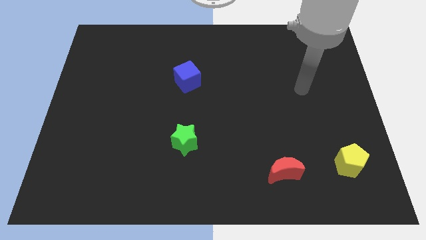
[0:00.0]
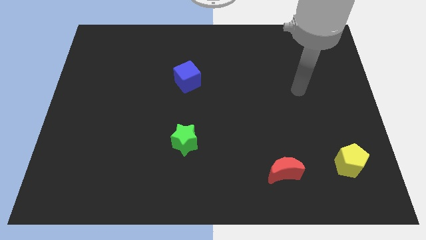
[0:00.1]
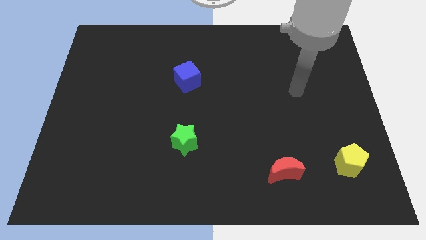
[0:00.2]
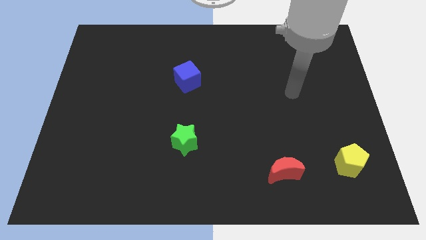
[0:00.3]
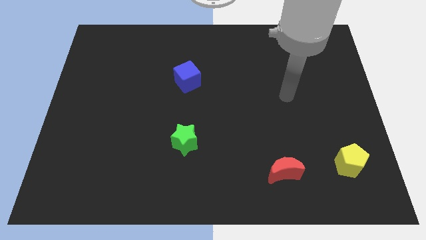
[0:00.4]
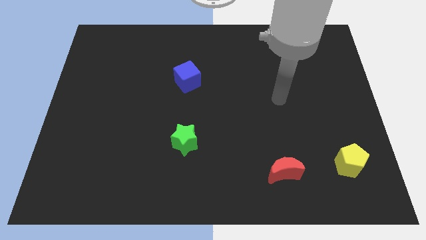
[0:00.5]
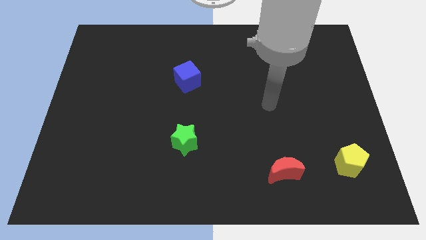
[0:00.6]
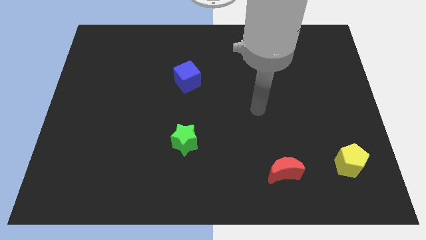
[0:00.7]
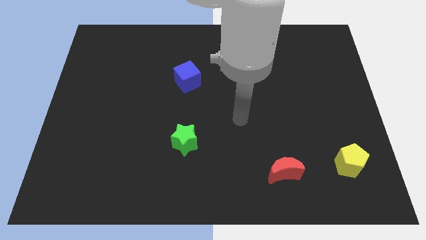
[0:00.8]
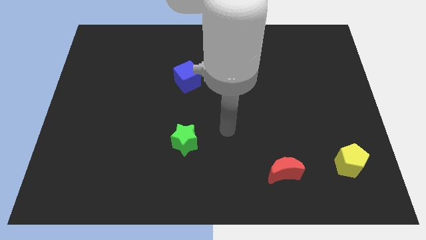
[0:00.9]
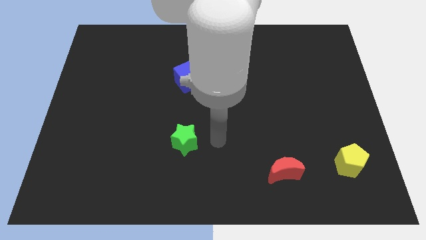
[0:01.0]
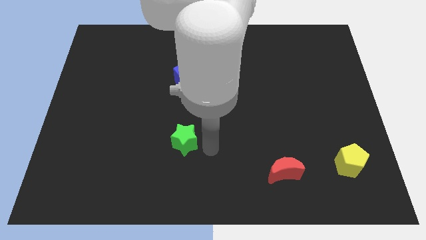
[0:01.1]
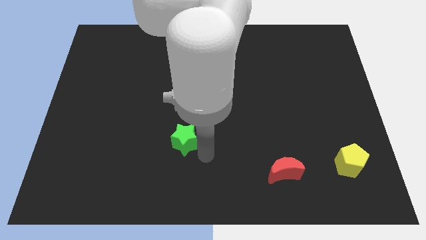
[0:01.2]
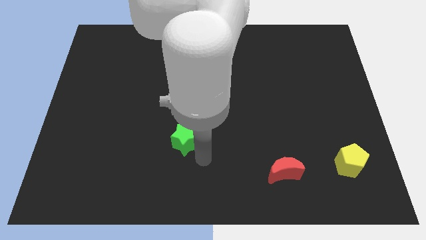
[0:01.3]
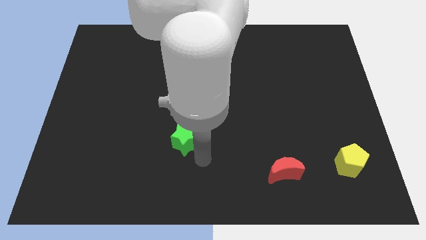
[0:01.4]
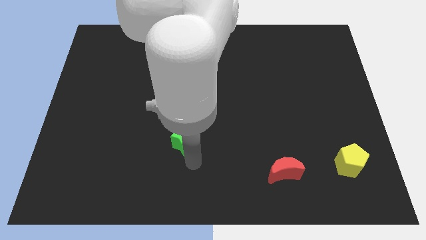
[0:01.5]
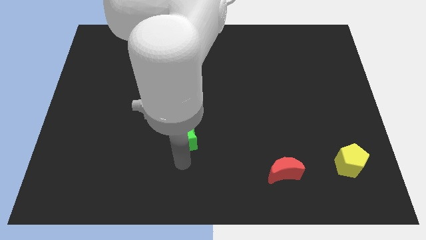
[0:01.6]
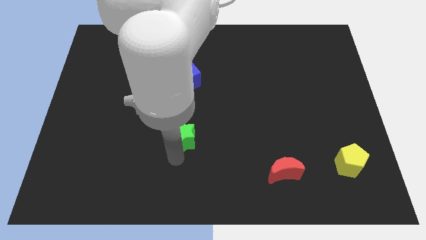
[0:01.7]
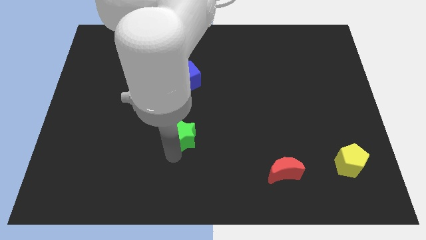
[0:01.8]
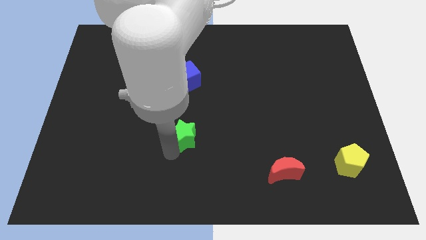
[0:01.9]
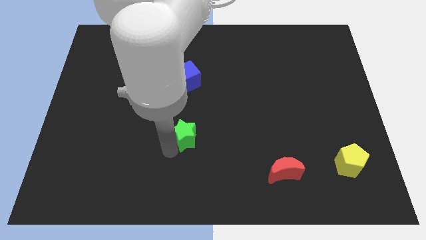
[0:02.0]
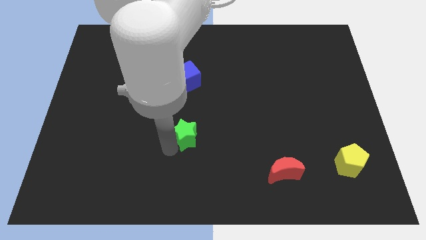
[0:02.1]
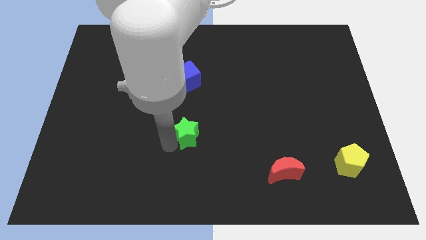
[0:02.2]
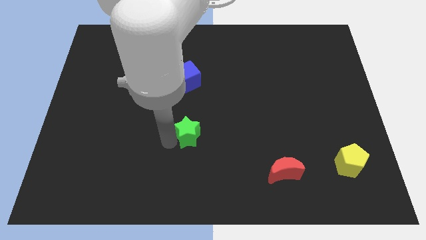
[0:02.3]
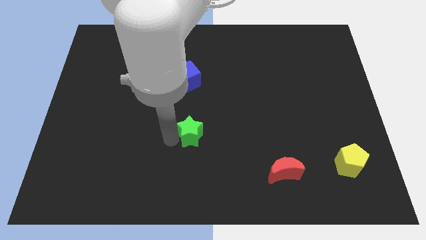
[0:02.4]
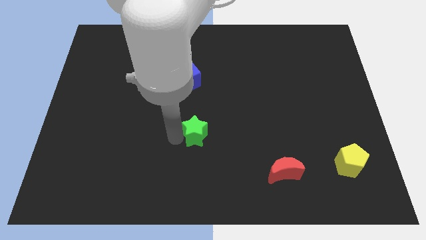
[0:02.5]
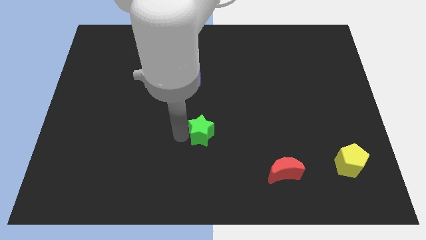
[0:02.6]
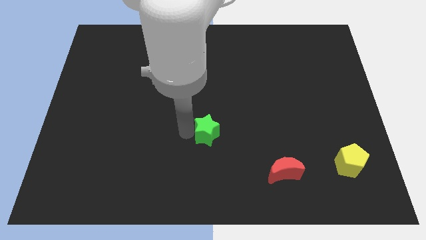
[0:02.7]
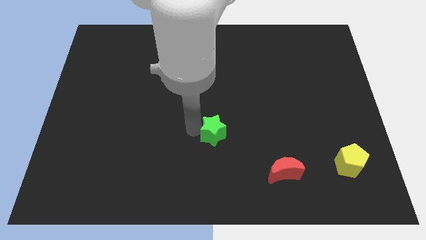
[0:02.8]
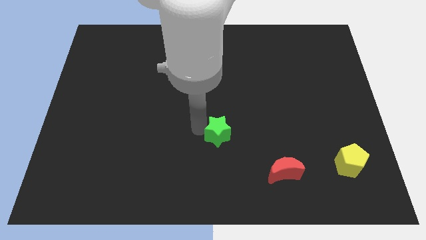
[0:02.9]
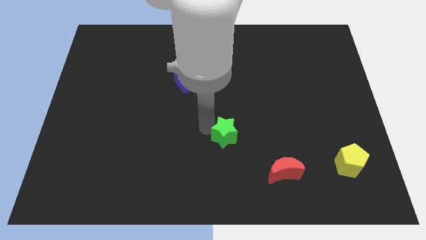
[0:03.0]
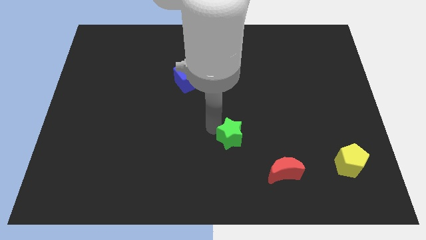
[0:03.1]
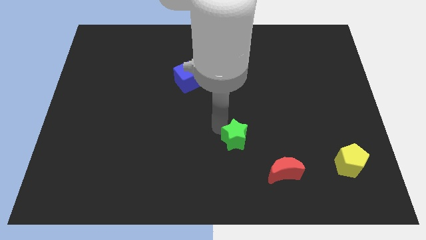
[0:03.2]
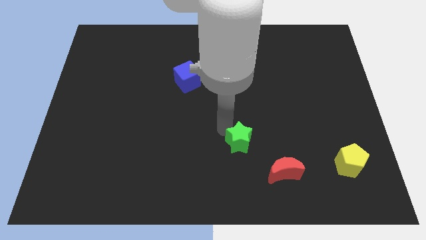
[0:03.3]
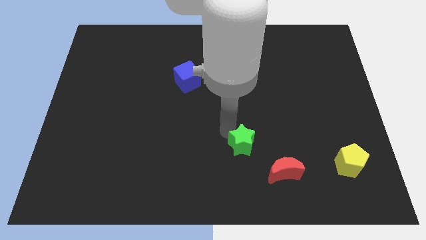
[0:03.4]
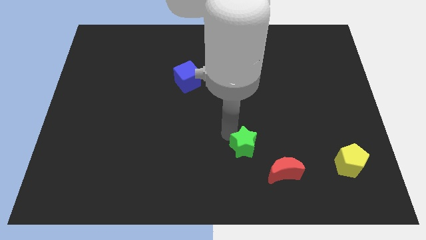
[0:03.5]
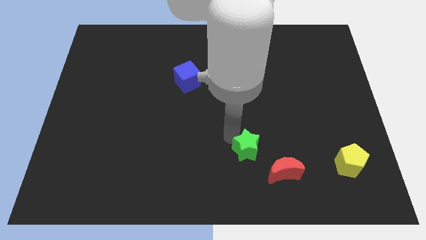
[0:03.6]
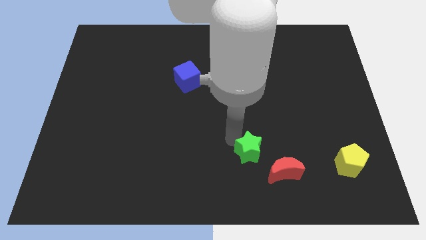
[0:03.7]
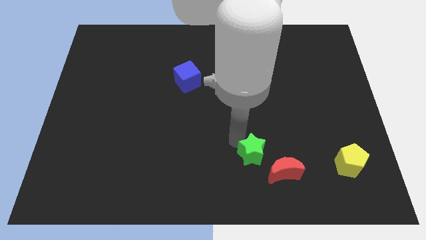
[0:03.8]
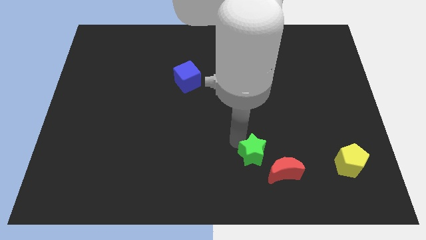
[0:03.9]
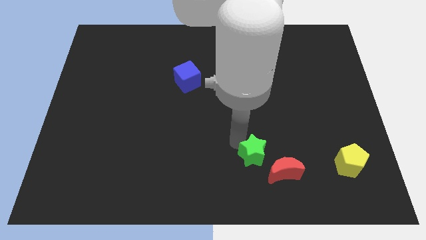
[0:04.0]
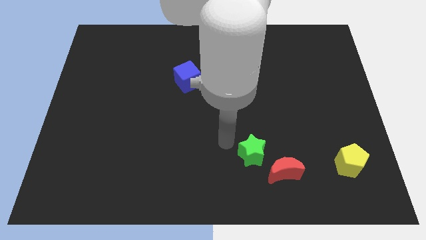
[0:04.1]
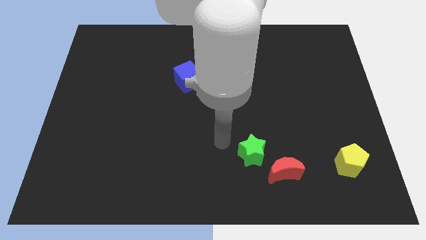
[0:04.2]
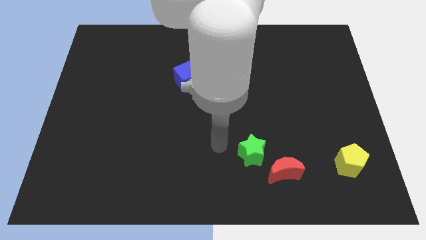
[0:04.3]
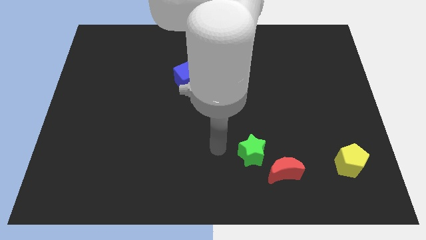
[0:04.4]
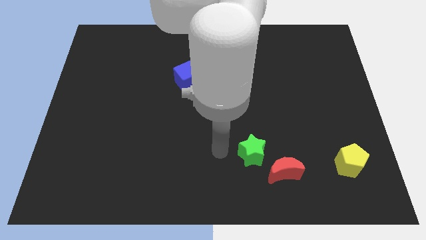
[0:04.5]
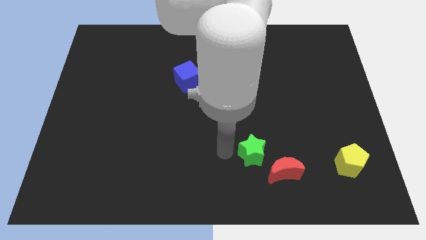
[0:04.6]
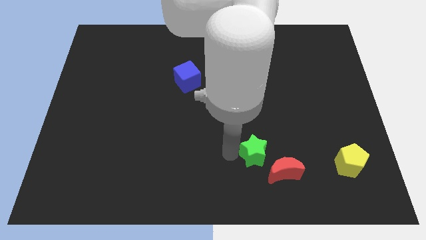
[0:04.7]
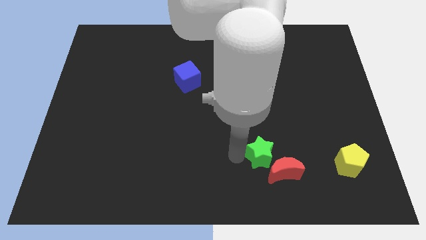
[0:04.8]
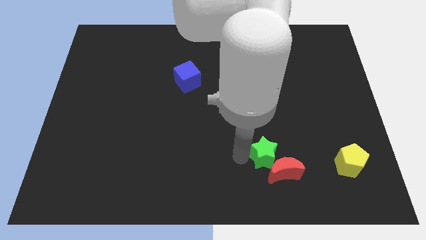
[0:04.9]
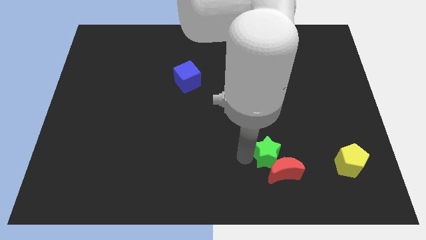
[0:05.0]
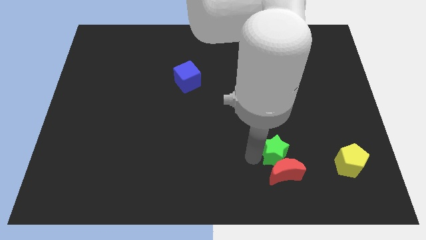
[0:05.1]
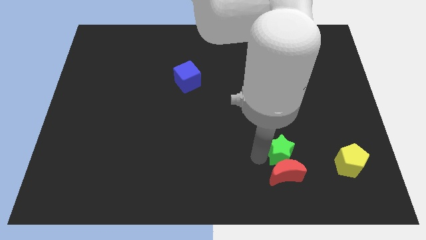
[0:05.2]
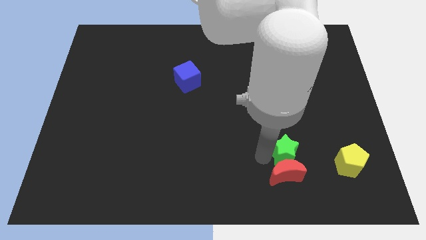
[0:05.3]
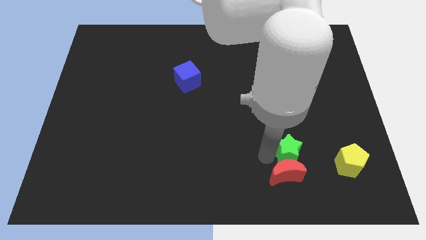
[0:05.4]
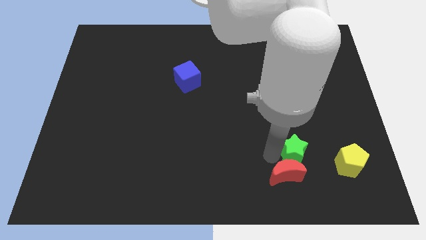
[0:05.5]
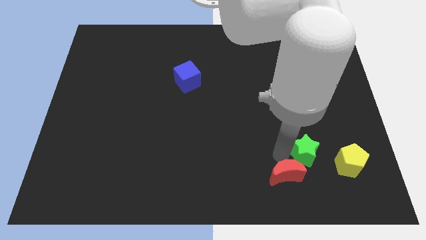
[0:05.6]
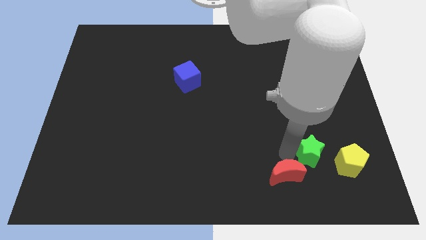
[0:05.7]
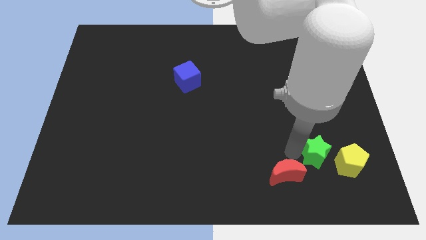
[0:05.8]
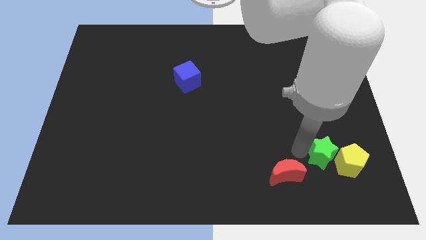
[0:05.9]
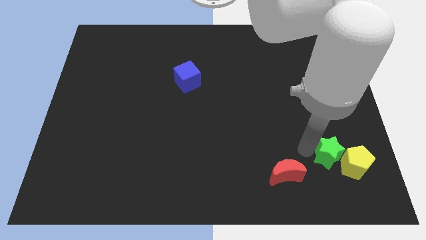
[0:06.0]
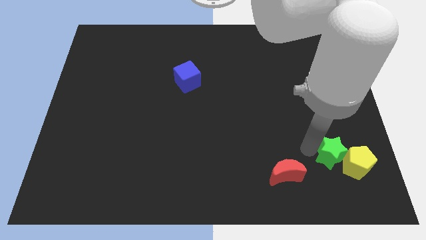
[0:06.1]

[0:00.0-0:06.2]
put the green block close to the pentagon

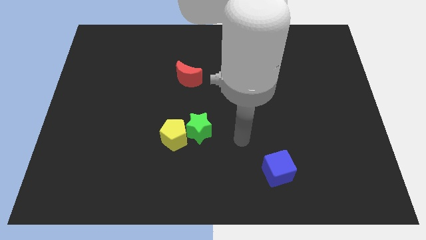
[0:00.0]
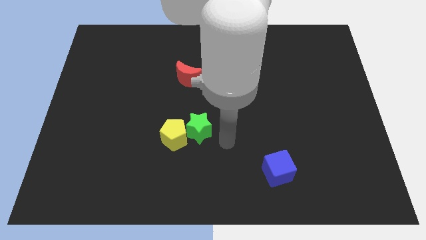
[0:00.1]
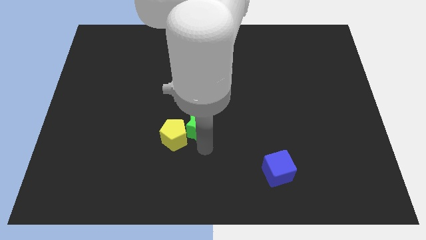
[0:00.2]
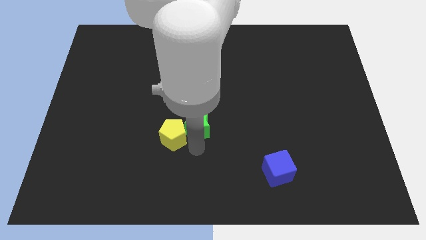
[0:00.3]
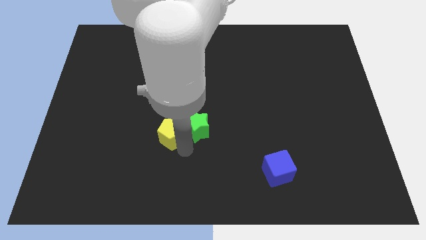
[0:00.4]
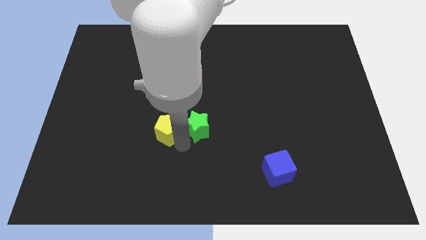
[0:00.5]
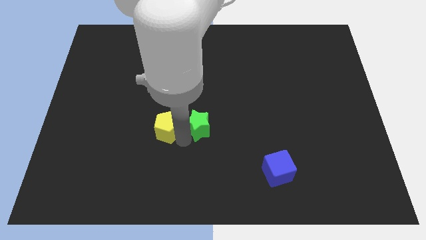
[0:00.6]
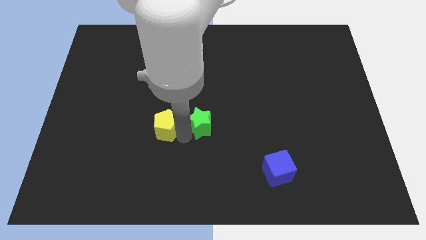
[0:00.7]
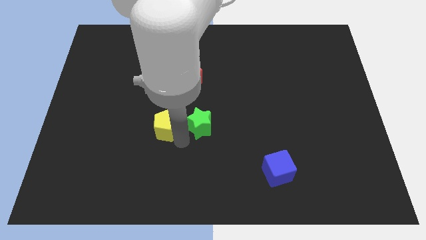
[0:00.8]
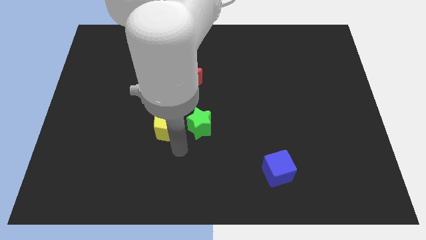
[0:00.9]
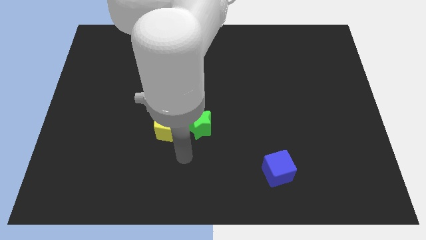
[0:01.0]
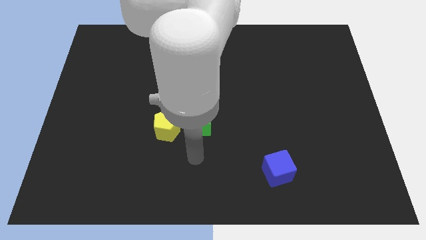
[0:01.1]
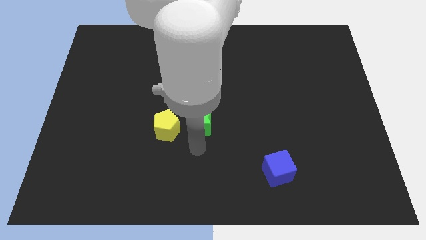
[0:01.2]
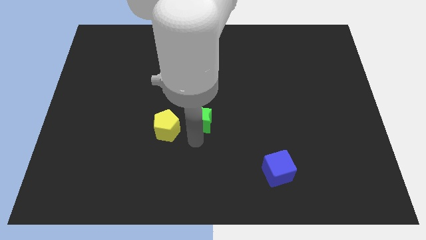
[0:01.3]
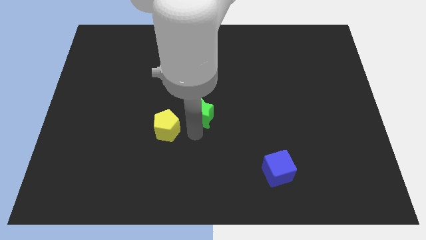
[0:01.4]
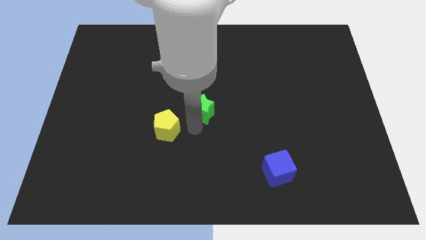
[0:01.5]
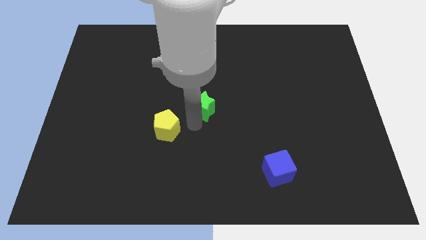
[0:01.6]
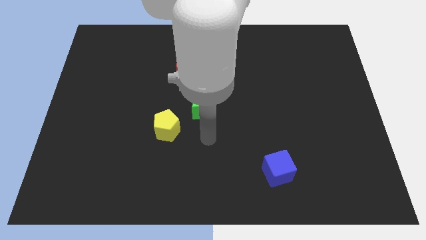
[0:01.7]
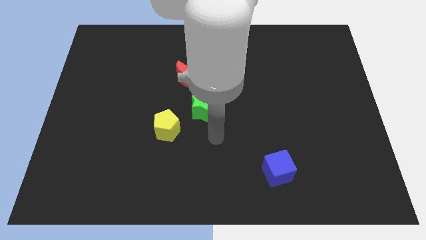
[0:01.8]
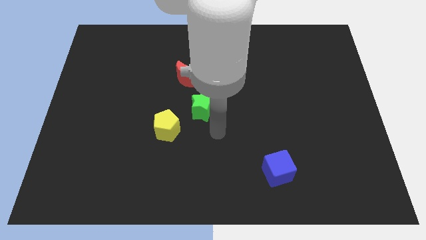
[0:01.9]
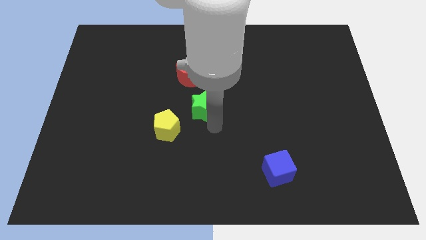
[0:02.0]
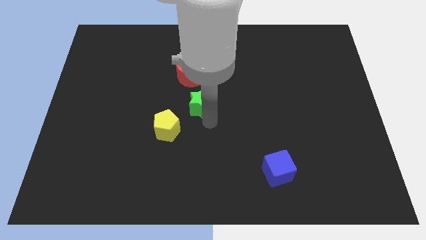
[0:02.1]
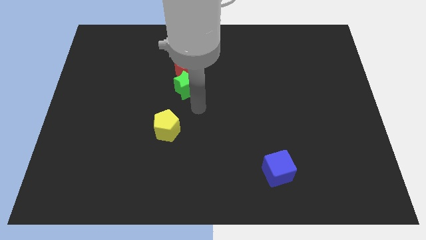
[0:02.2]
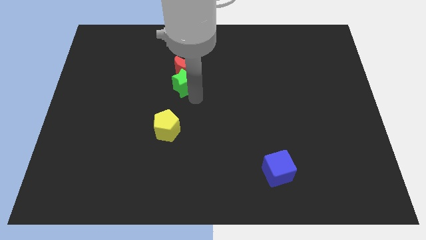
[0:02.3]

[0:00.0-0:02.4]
push the green star to the red moon

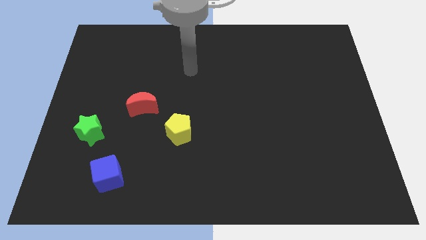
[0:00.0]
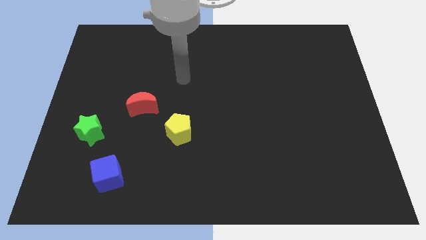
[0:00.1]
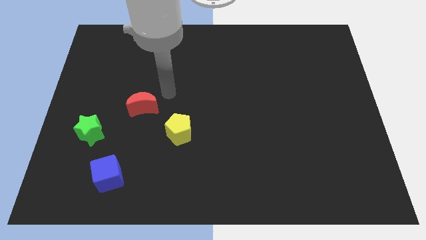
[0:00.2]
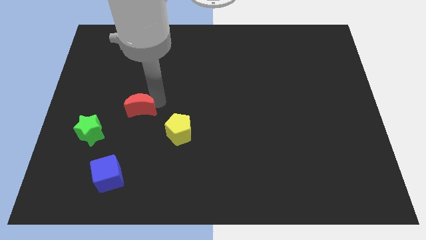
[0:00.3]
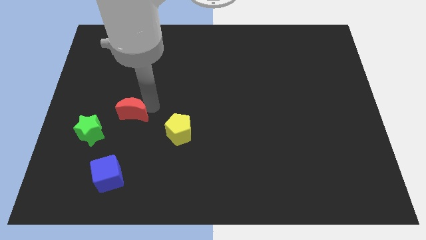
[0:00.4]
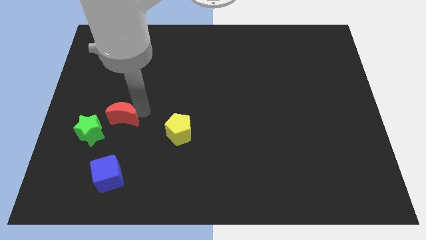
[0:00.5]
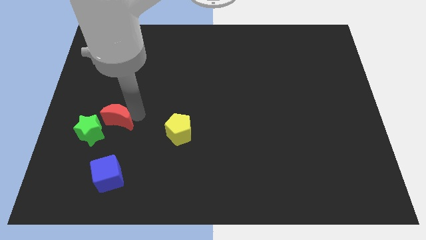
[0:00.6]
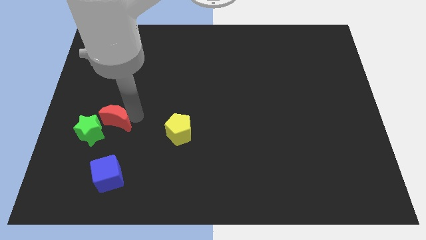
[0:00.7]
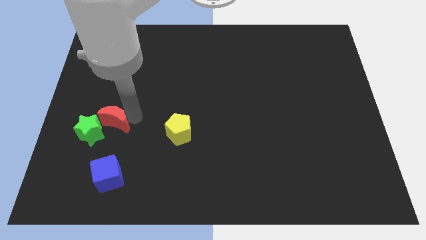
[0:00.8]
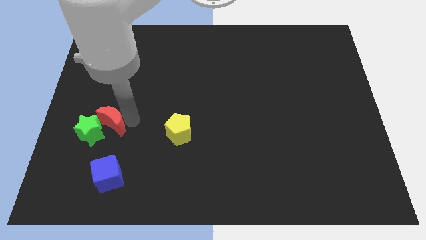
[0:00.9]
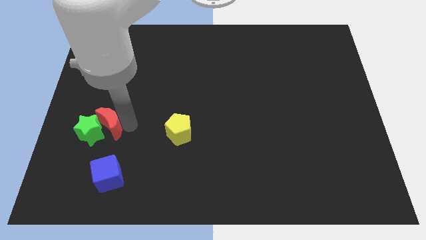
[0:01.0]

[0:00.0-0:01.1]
slide the moon close to the star
